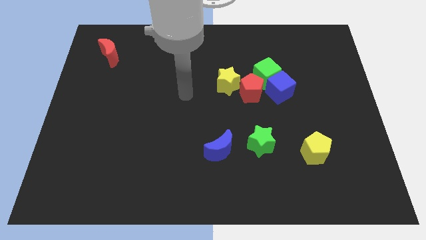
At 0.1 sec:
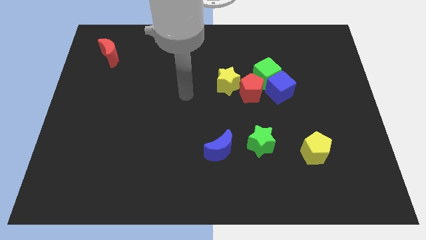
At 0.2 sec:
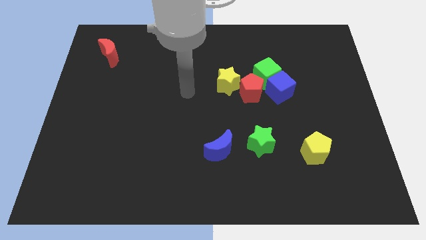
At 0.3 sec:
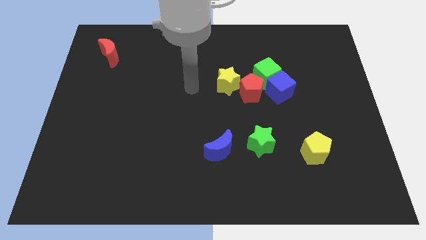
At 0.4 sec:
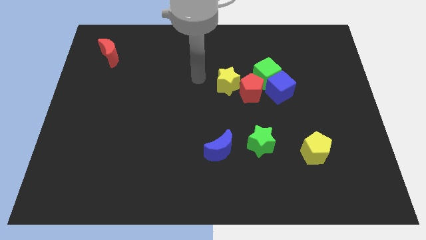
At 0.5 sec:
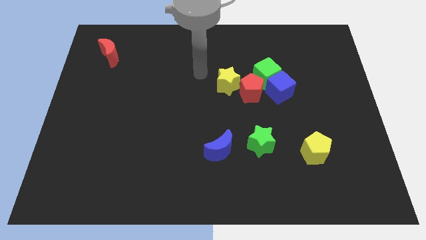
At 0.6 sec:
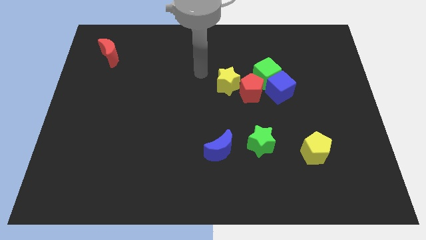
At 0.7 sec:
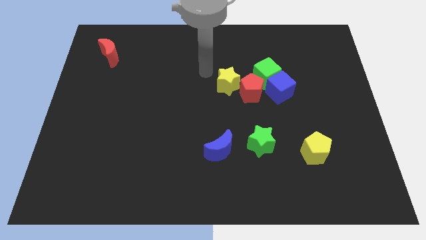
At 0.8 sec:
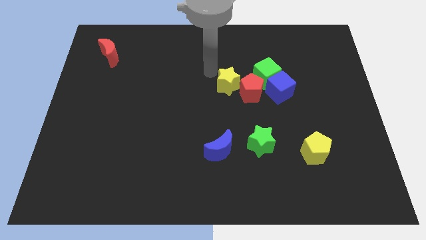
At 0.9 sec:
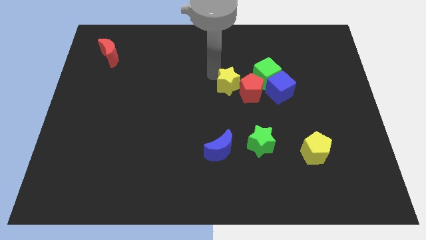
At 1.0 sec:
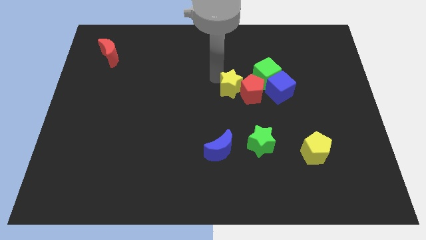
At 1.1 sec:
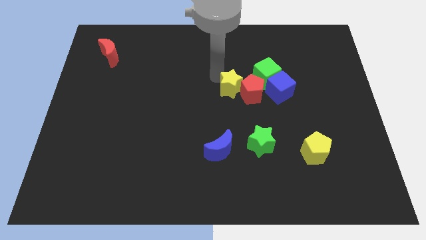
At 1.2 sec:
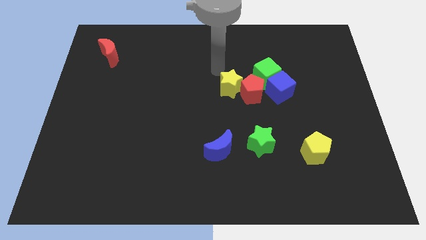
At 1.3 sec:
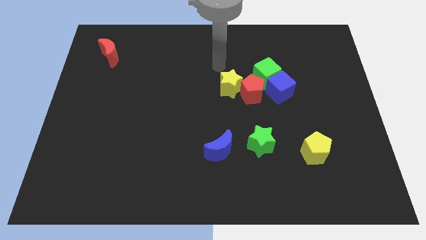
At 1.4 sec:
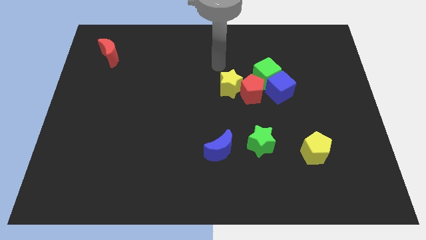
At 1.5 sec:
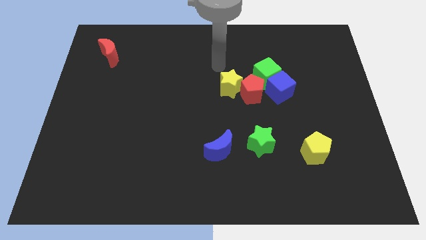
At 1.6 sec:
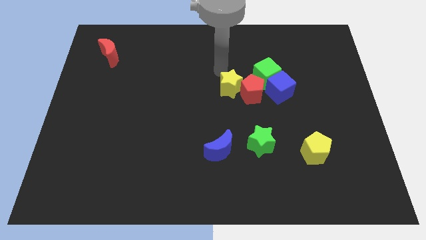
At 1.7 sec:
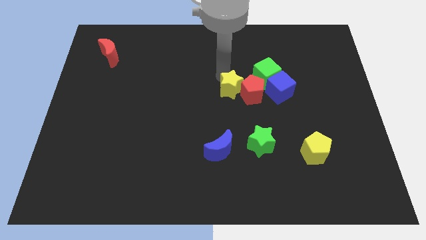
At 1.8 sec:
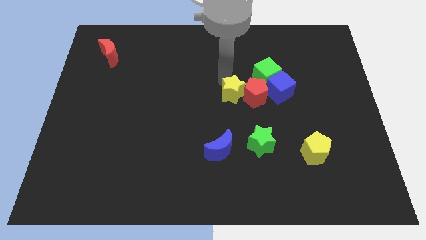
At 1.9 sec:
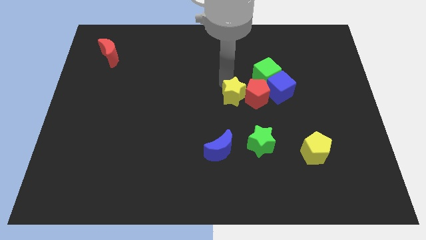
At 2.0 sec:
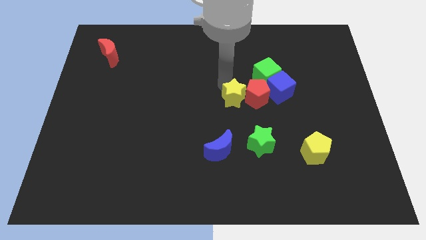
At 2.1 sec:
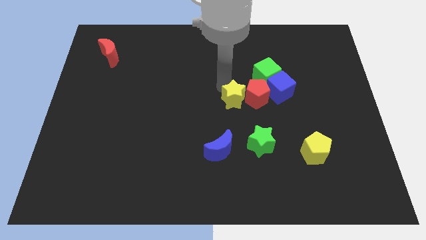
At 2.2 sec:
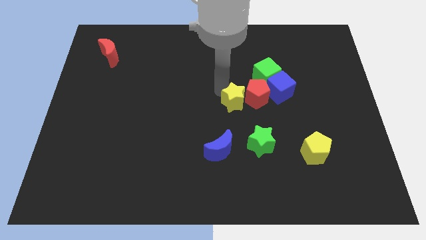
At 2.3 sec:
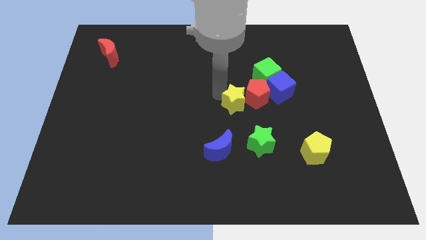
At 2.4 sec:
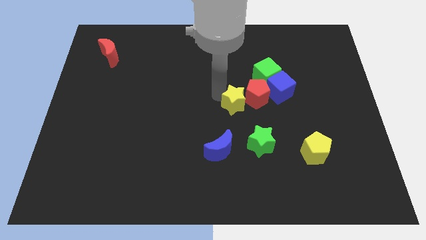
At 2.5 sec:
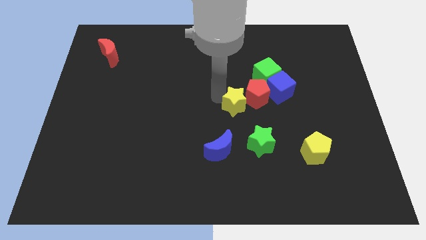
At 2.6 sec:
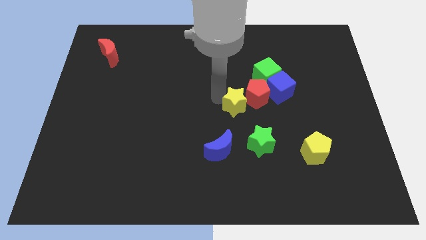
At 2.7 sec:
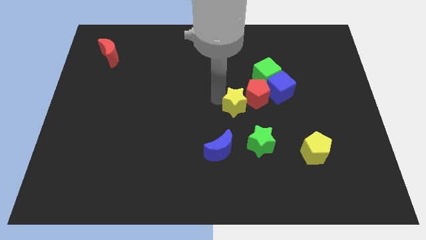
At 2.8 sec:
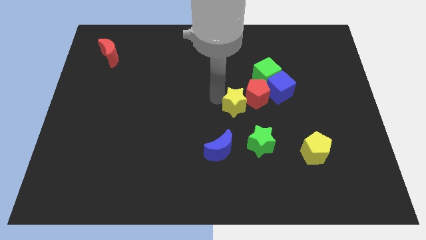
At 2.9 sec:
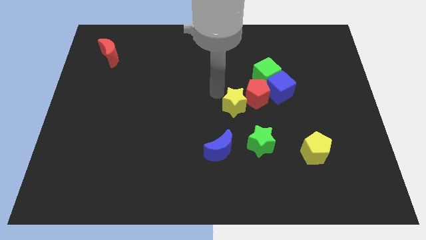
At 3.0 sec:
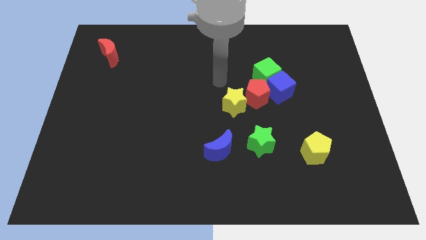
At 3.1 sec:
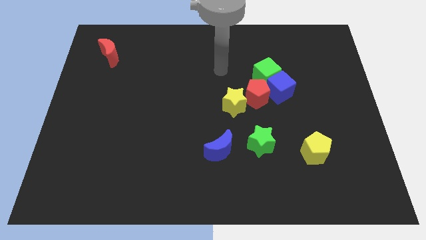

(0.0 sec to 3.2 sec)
push the yellow star into the red pentagon

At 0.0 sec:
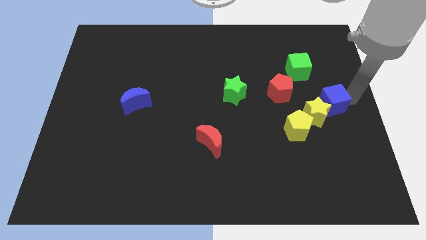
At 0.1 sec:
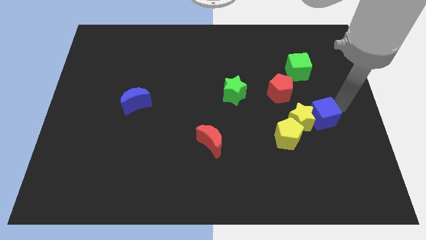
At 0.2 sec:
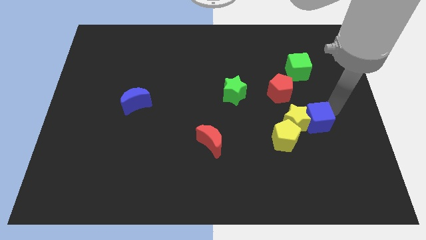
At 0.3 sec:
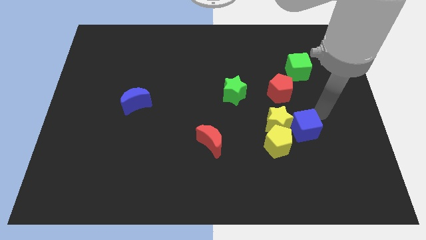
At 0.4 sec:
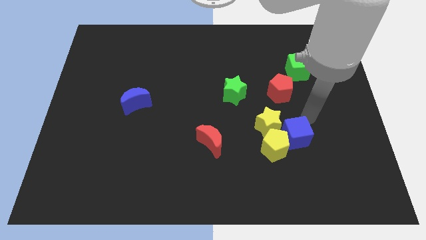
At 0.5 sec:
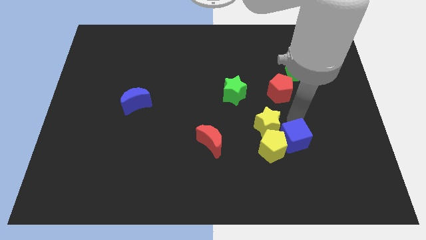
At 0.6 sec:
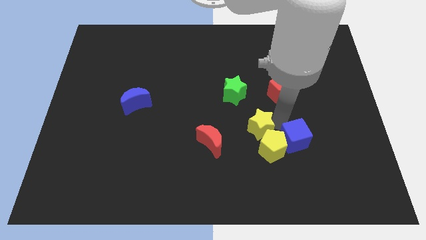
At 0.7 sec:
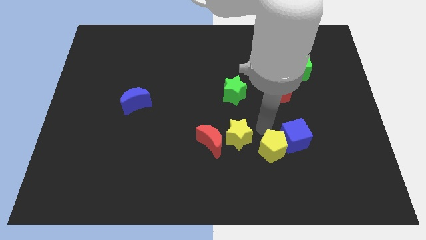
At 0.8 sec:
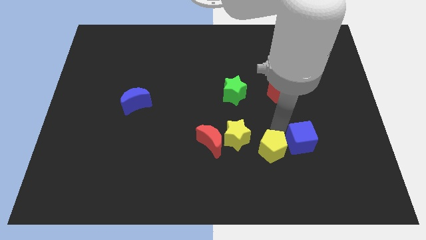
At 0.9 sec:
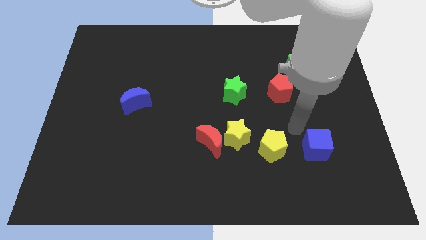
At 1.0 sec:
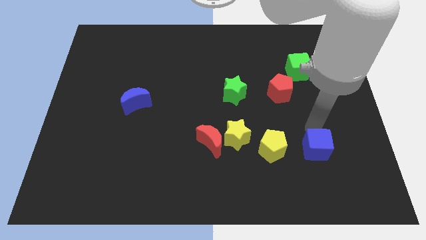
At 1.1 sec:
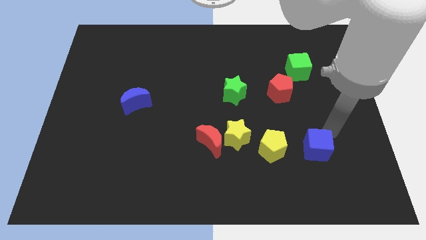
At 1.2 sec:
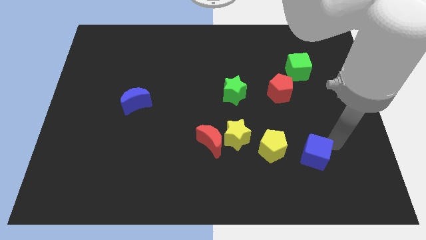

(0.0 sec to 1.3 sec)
move the blue cube to the right side of the yellow pentagon

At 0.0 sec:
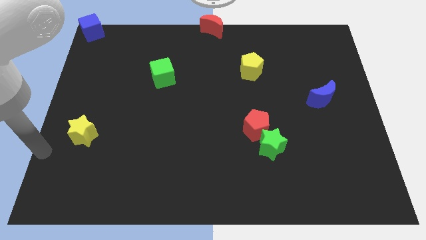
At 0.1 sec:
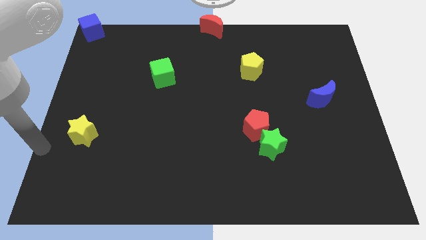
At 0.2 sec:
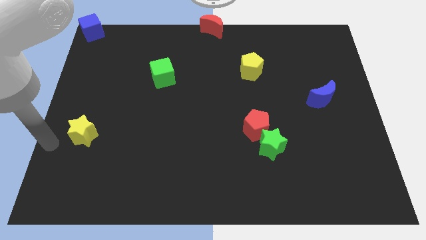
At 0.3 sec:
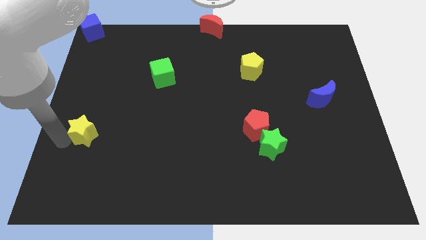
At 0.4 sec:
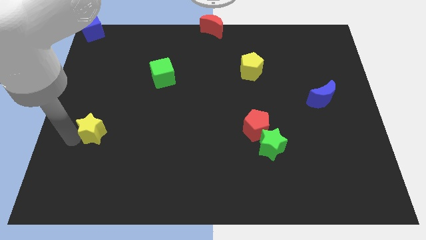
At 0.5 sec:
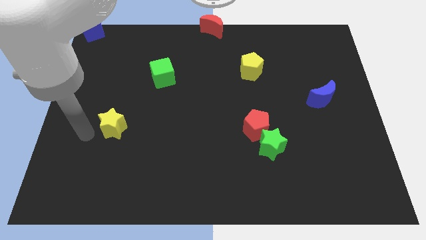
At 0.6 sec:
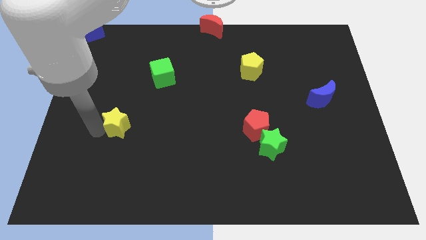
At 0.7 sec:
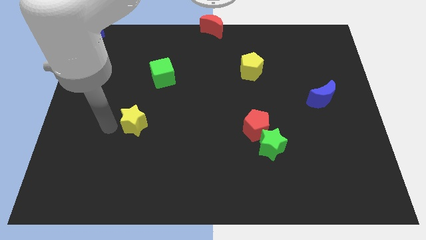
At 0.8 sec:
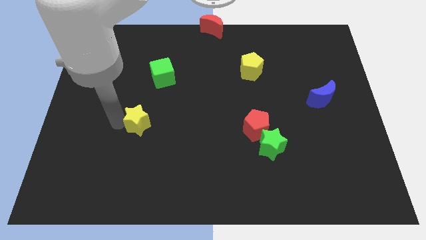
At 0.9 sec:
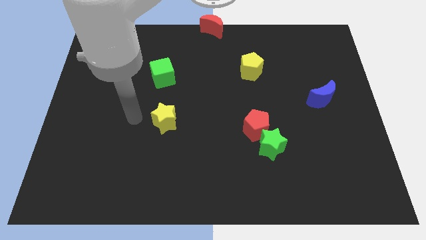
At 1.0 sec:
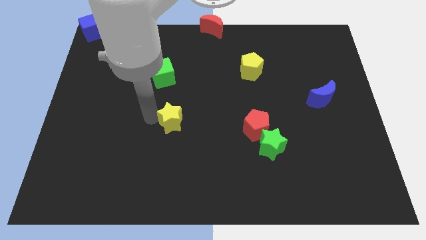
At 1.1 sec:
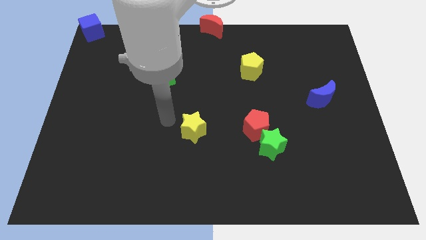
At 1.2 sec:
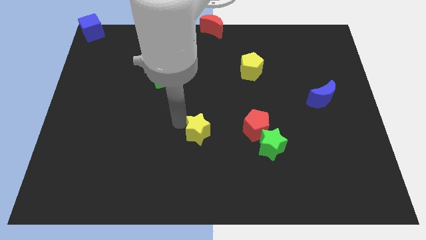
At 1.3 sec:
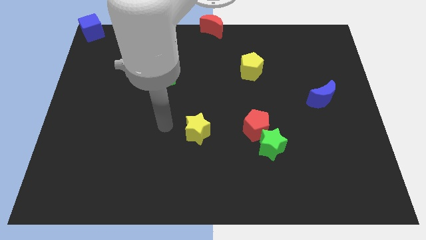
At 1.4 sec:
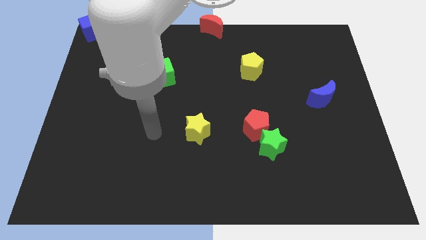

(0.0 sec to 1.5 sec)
place the yellow star left to the red pentagon

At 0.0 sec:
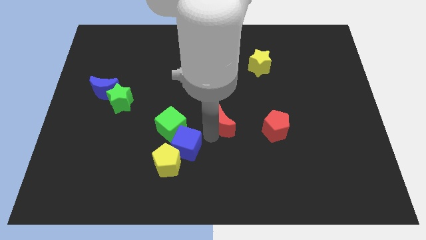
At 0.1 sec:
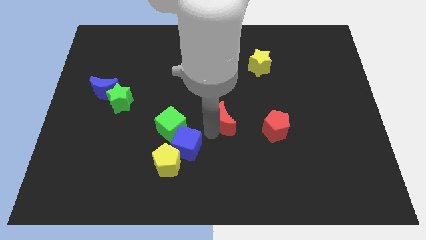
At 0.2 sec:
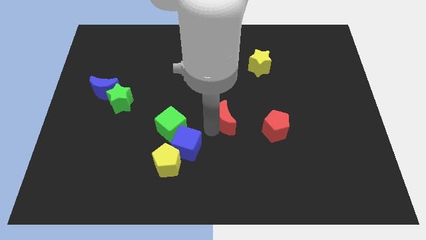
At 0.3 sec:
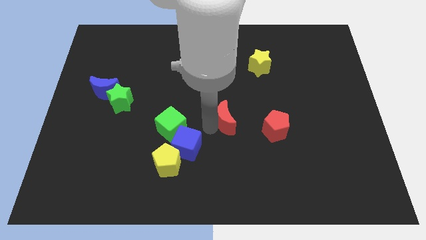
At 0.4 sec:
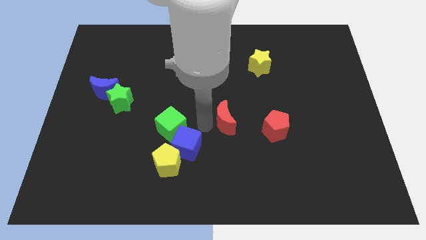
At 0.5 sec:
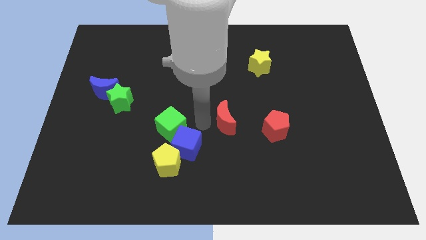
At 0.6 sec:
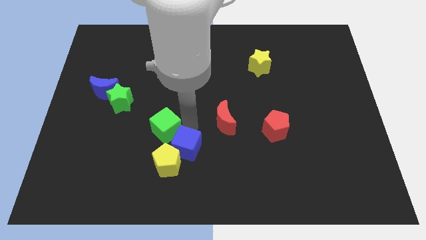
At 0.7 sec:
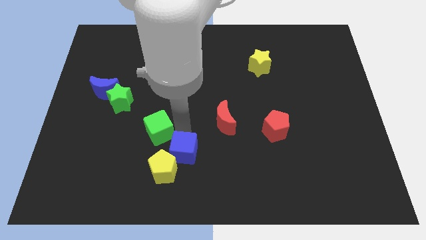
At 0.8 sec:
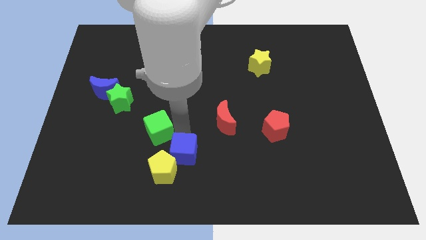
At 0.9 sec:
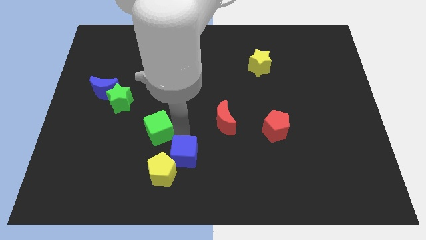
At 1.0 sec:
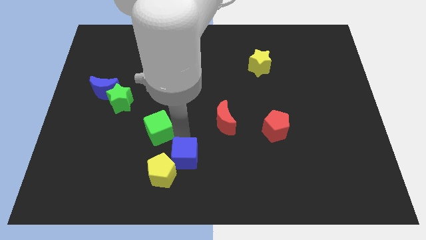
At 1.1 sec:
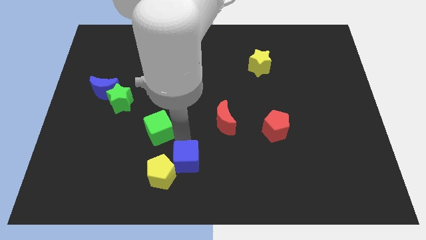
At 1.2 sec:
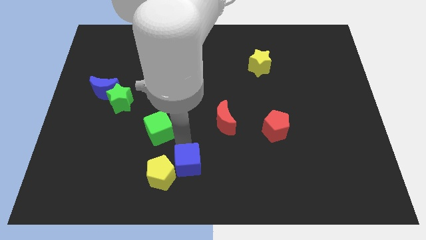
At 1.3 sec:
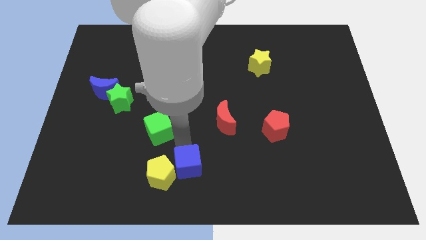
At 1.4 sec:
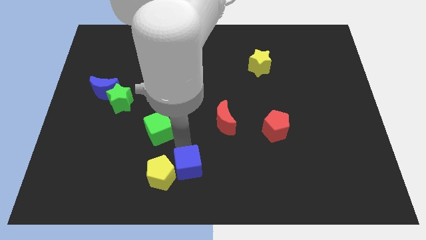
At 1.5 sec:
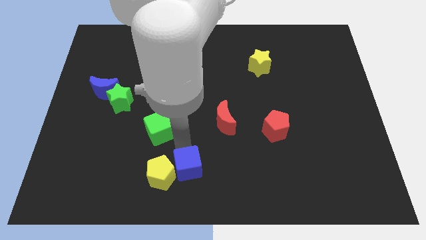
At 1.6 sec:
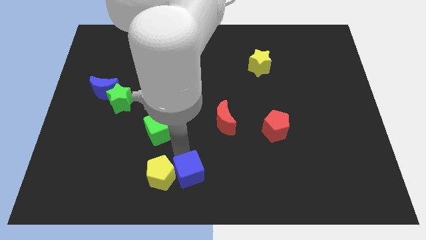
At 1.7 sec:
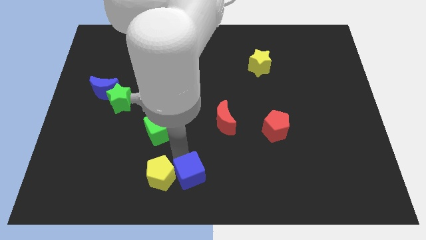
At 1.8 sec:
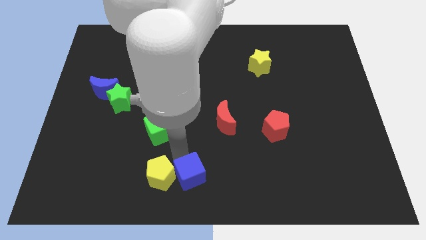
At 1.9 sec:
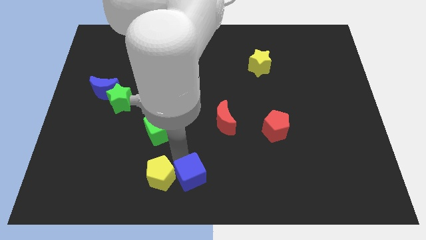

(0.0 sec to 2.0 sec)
push the blue cube to the right of the yellow pentagon

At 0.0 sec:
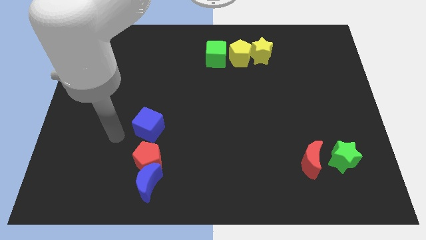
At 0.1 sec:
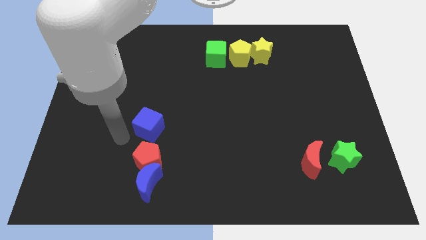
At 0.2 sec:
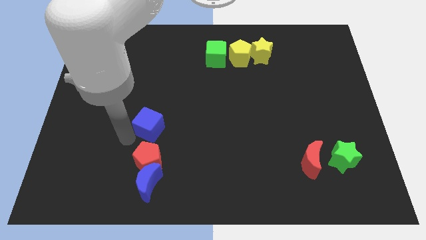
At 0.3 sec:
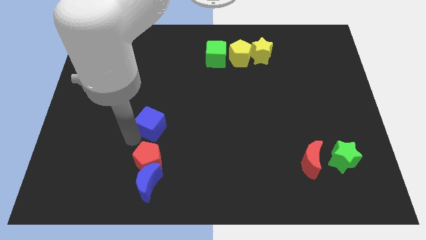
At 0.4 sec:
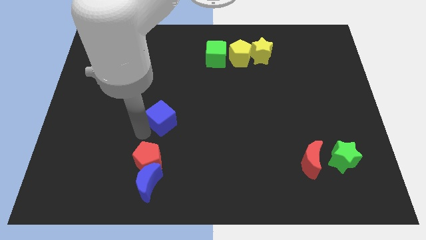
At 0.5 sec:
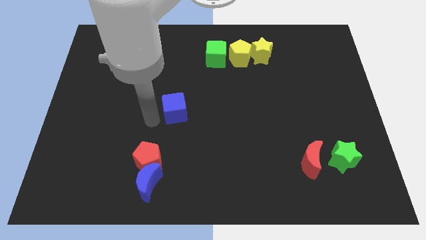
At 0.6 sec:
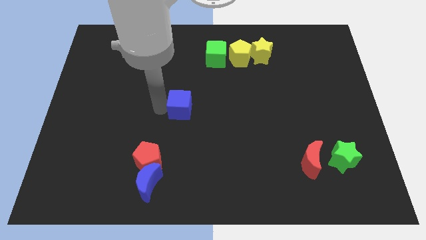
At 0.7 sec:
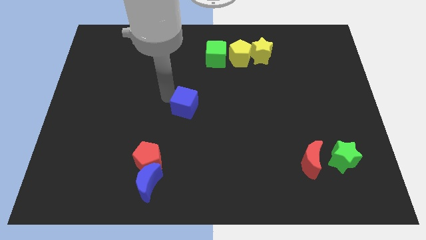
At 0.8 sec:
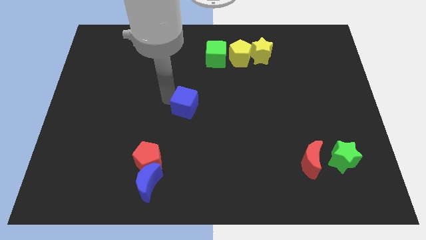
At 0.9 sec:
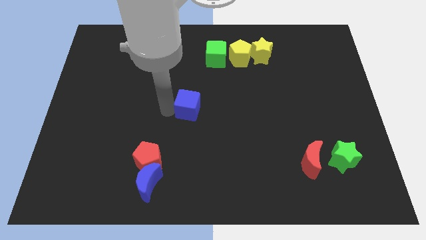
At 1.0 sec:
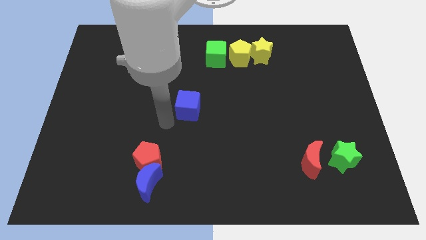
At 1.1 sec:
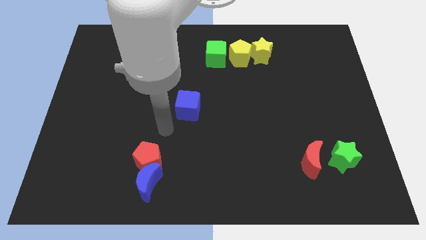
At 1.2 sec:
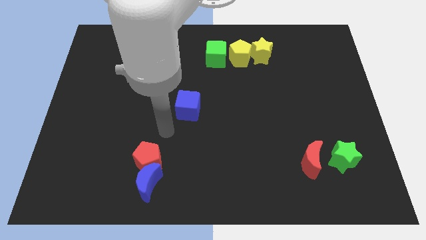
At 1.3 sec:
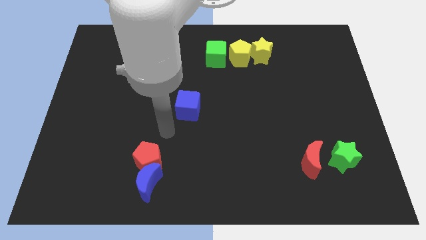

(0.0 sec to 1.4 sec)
separate the blue cube from the red pentagon
